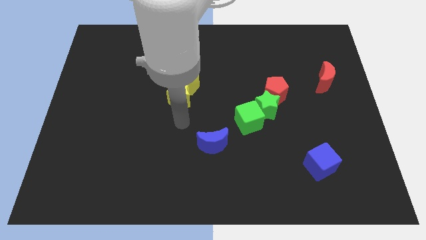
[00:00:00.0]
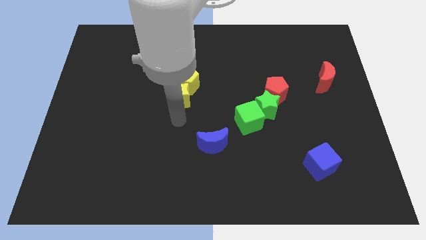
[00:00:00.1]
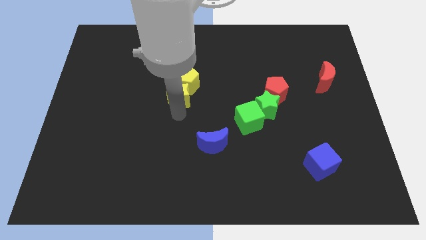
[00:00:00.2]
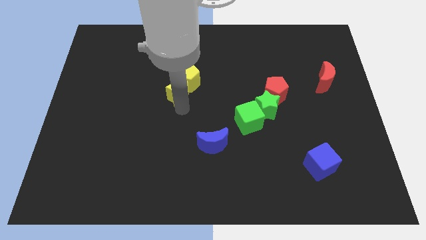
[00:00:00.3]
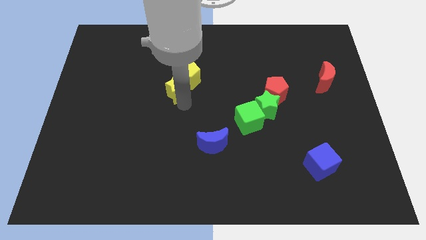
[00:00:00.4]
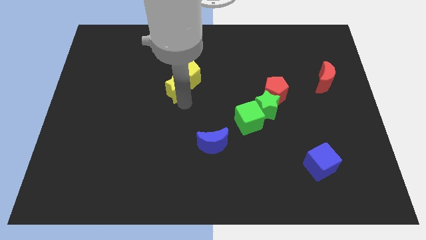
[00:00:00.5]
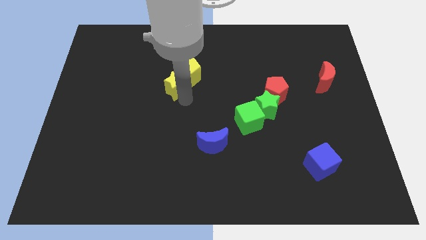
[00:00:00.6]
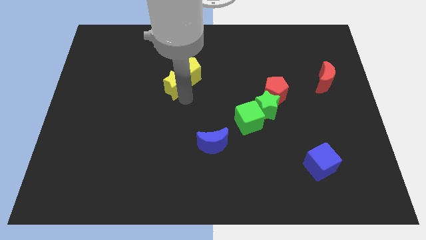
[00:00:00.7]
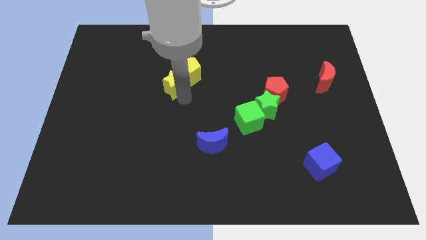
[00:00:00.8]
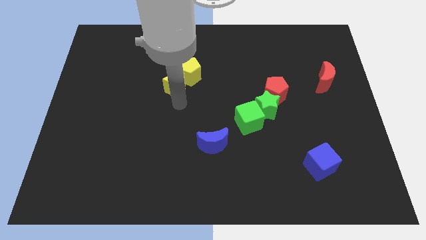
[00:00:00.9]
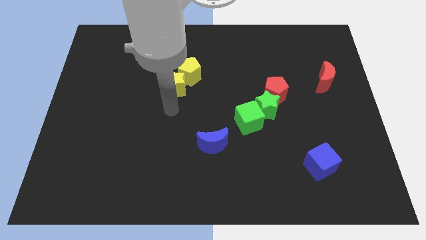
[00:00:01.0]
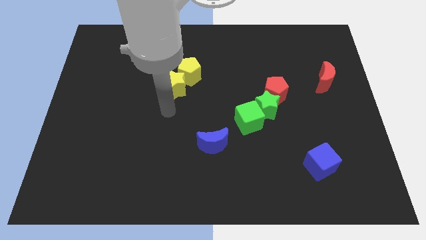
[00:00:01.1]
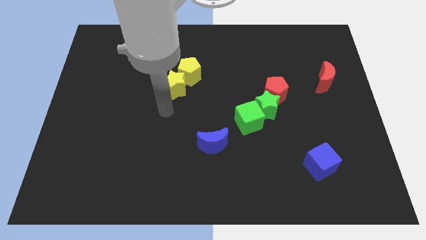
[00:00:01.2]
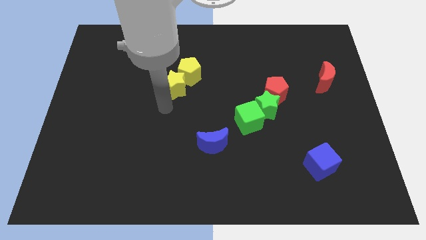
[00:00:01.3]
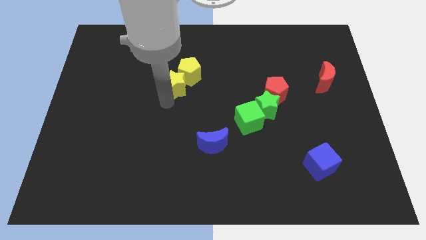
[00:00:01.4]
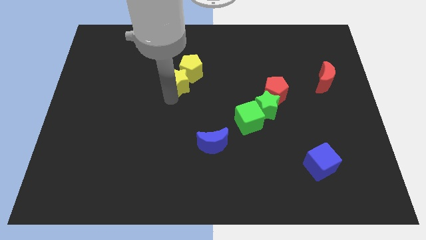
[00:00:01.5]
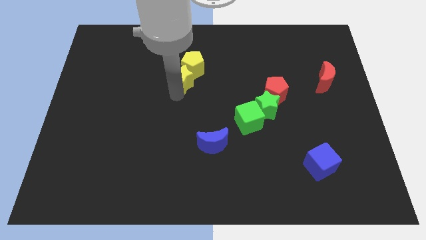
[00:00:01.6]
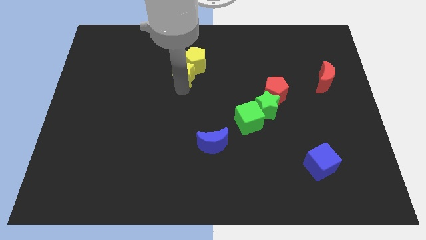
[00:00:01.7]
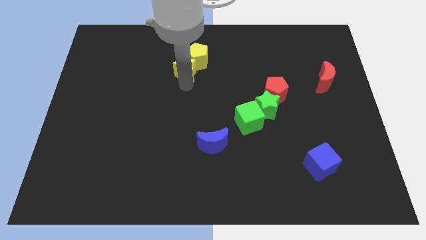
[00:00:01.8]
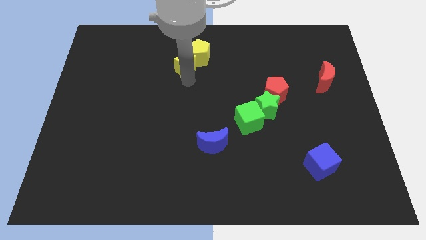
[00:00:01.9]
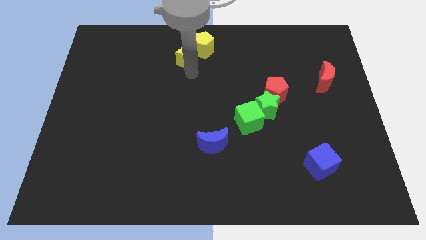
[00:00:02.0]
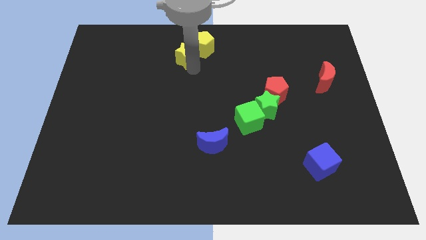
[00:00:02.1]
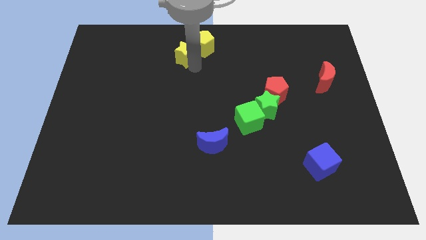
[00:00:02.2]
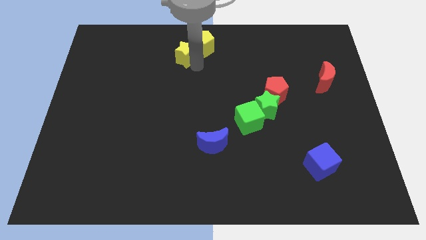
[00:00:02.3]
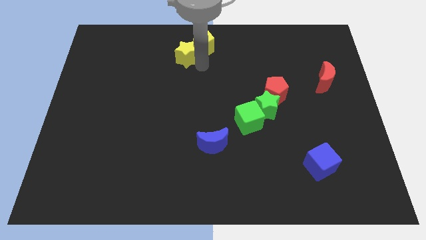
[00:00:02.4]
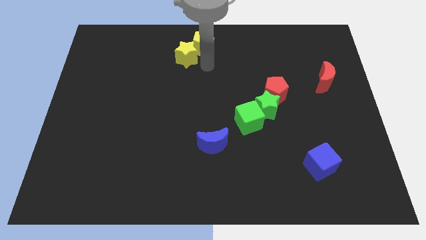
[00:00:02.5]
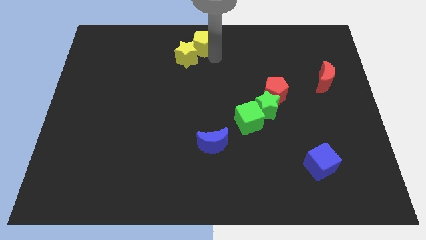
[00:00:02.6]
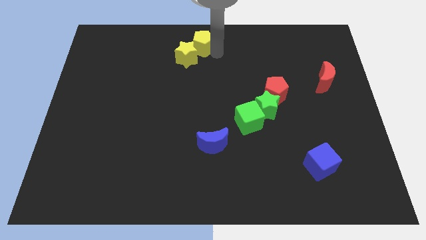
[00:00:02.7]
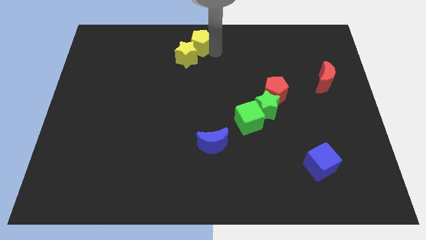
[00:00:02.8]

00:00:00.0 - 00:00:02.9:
move yellow blocks at center top

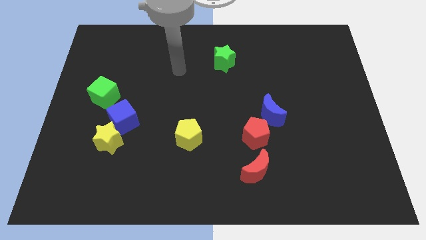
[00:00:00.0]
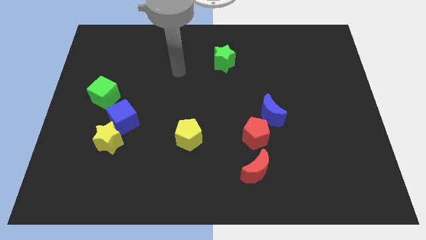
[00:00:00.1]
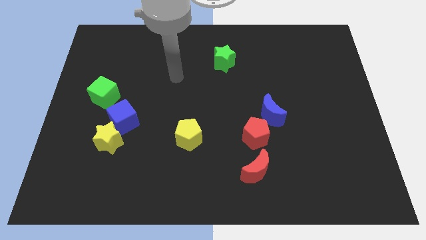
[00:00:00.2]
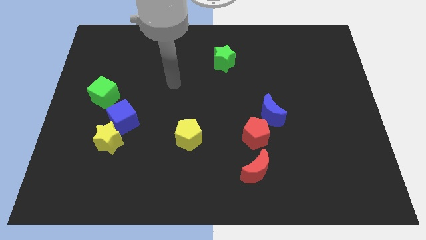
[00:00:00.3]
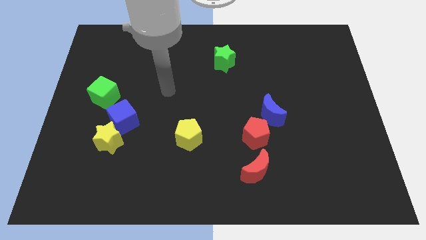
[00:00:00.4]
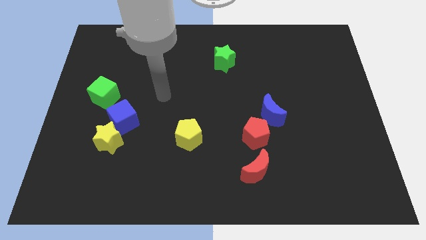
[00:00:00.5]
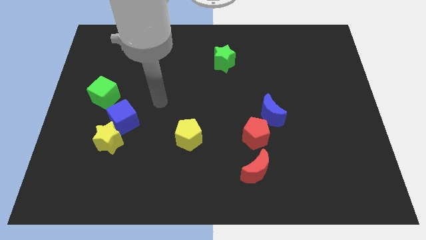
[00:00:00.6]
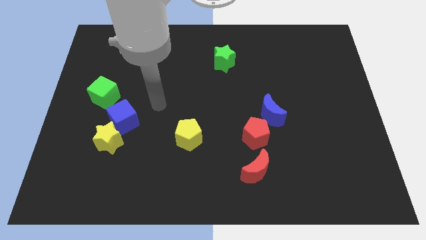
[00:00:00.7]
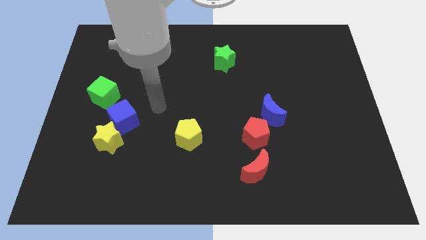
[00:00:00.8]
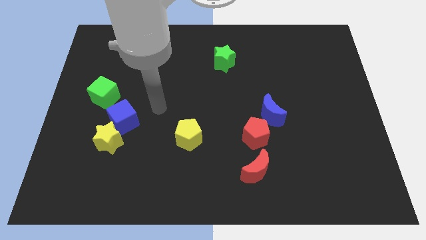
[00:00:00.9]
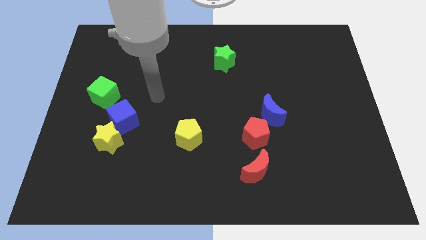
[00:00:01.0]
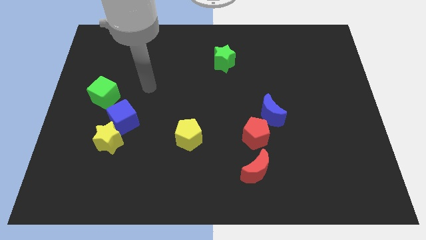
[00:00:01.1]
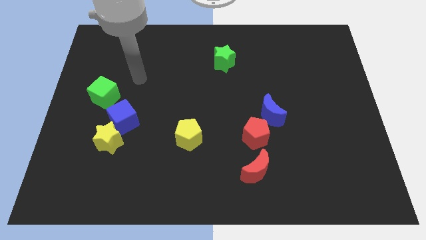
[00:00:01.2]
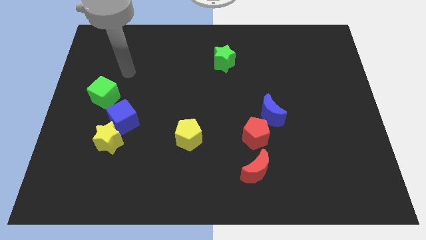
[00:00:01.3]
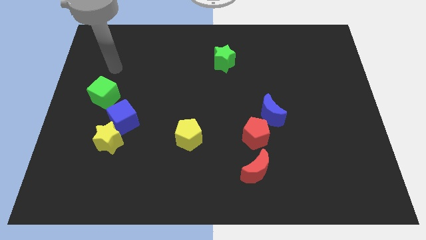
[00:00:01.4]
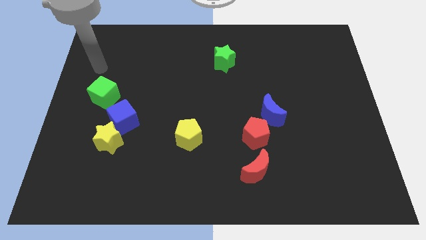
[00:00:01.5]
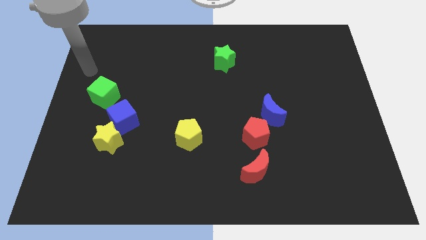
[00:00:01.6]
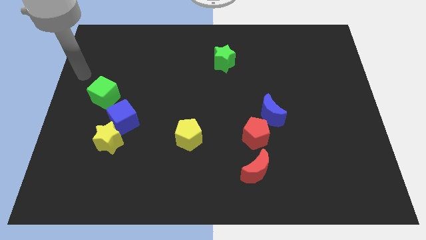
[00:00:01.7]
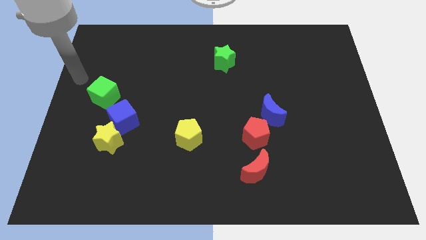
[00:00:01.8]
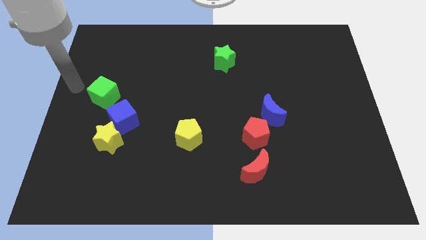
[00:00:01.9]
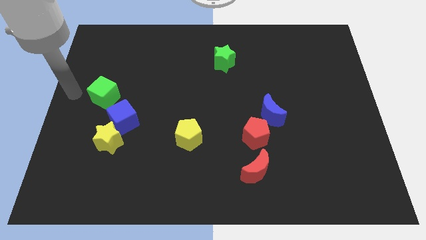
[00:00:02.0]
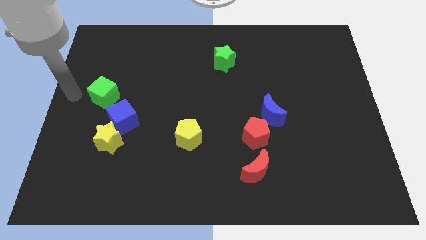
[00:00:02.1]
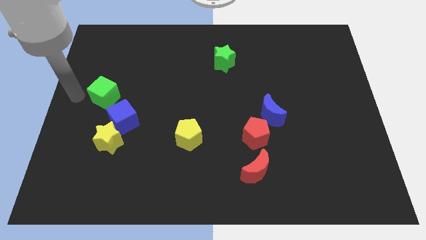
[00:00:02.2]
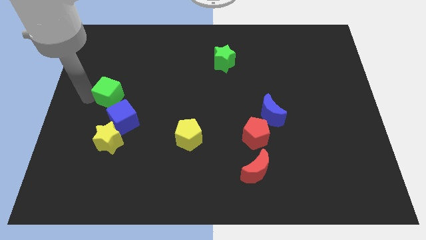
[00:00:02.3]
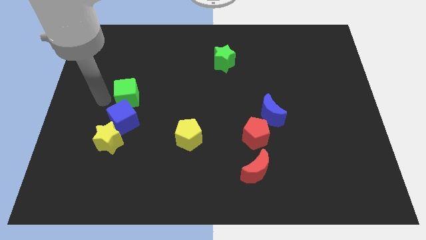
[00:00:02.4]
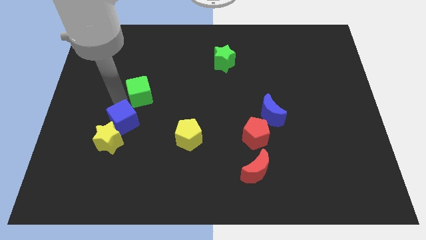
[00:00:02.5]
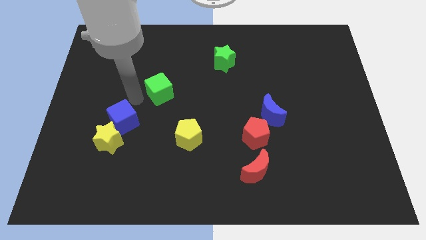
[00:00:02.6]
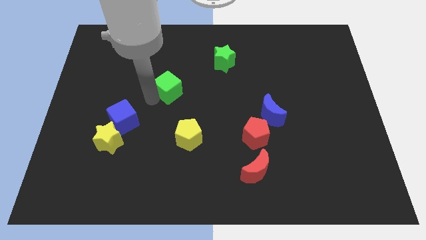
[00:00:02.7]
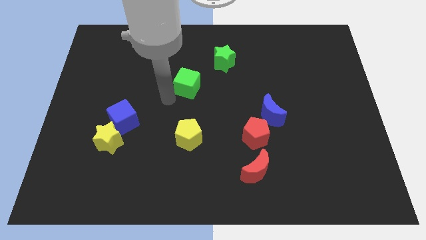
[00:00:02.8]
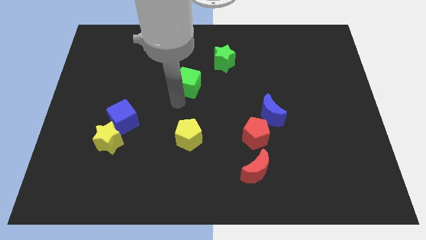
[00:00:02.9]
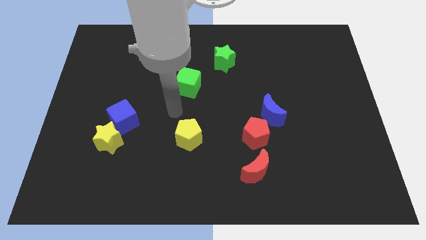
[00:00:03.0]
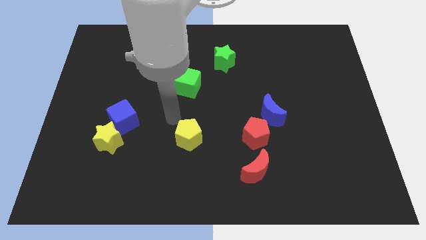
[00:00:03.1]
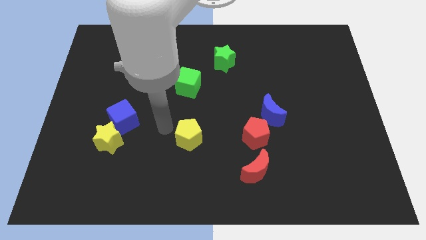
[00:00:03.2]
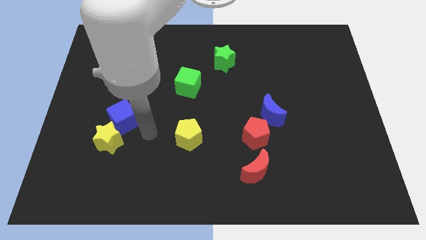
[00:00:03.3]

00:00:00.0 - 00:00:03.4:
move the green cube vertically top of the yellow pentagon

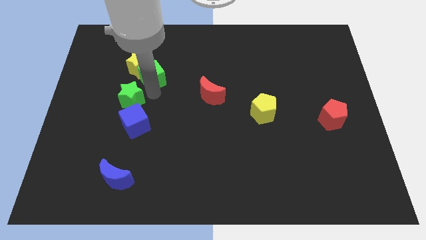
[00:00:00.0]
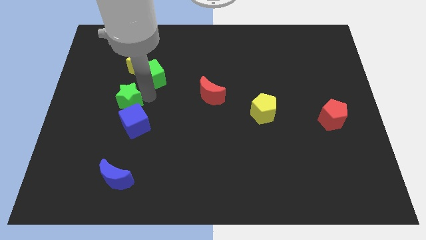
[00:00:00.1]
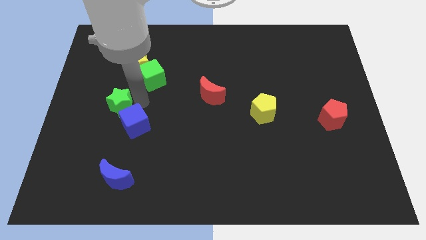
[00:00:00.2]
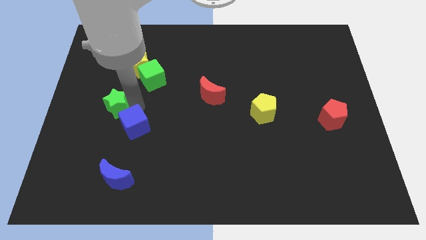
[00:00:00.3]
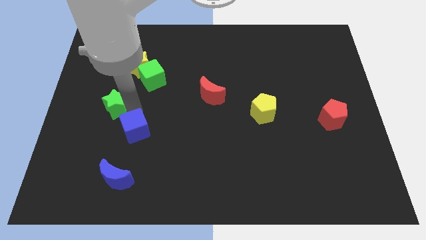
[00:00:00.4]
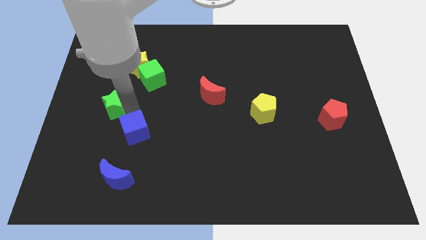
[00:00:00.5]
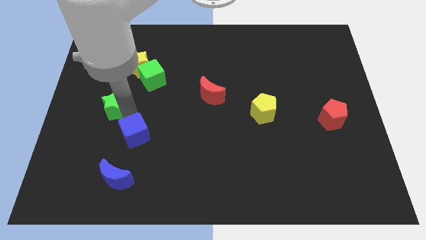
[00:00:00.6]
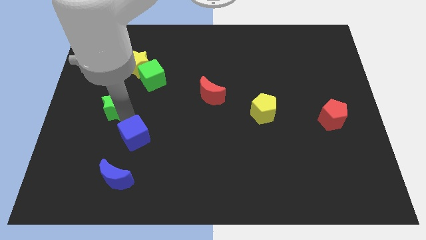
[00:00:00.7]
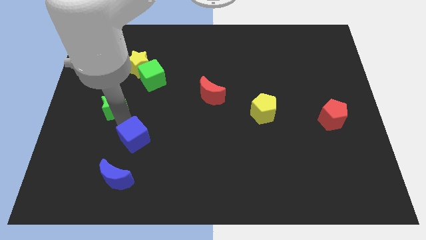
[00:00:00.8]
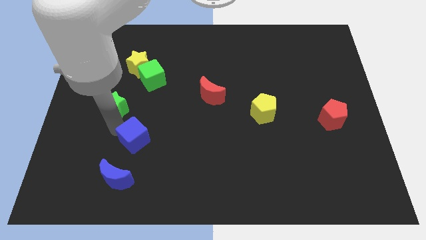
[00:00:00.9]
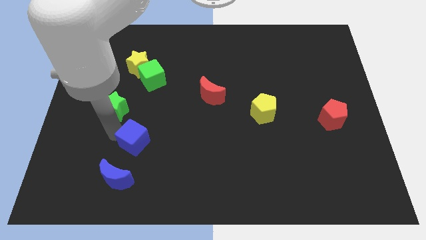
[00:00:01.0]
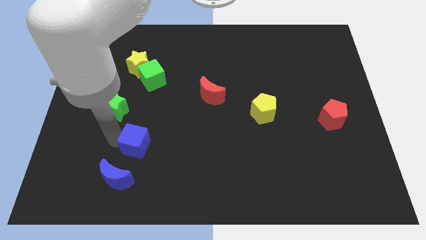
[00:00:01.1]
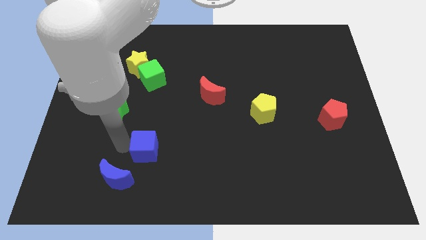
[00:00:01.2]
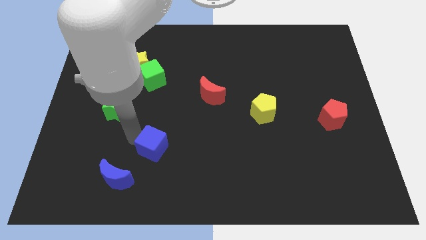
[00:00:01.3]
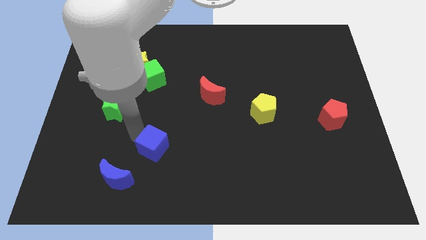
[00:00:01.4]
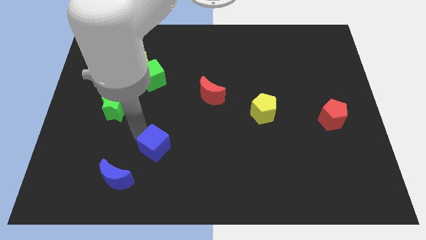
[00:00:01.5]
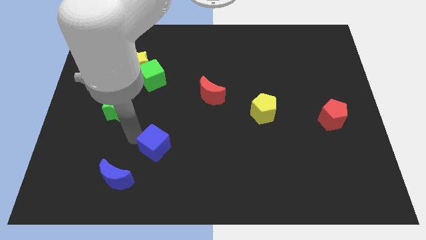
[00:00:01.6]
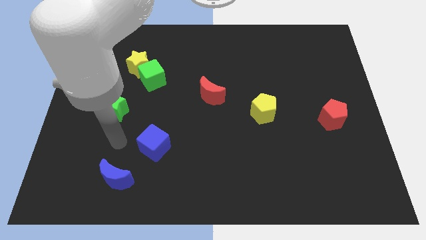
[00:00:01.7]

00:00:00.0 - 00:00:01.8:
take the blue cube away from the green star

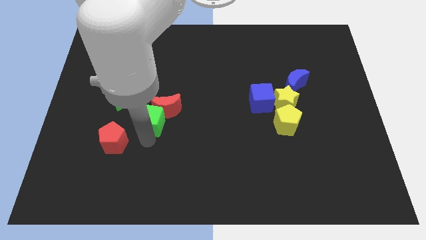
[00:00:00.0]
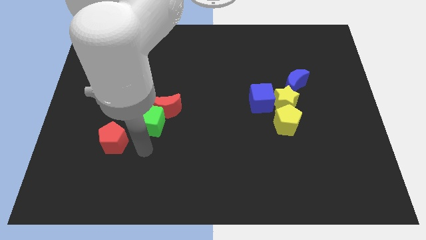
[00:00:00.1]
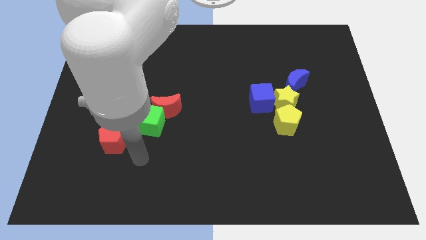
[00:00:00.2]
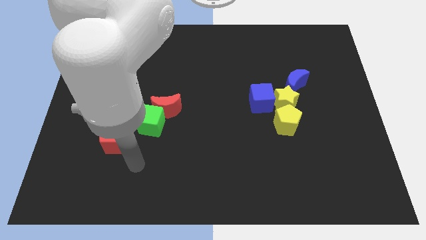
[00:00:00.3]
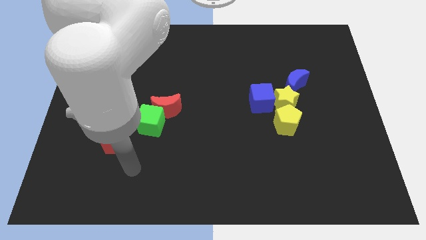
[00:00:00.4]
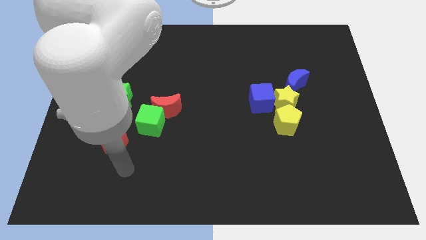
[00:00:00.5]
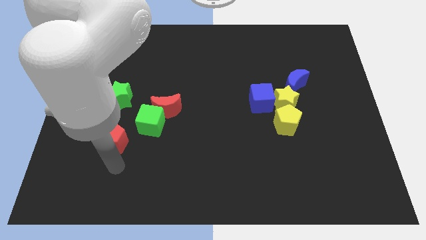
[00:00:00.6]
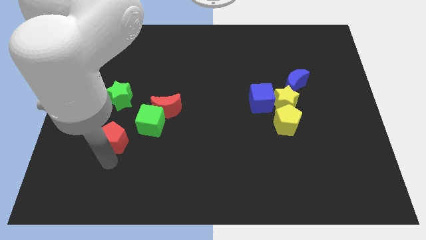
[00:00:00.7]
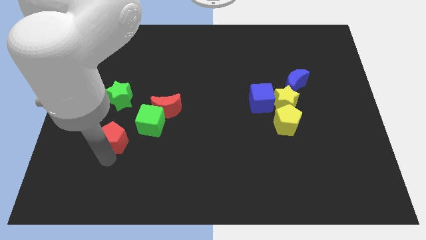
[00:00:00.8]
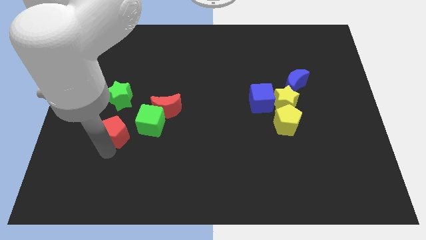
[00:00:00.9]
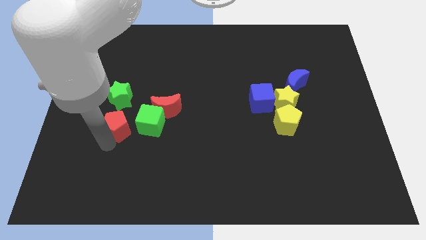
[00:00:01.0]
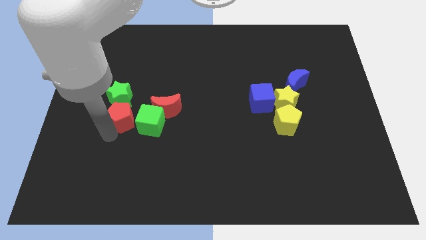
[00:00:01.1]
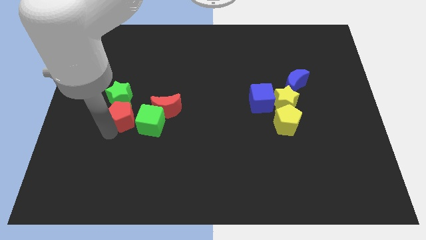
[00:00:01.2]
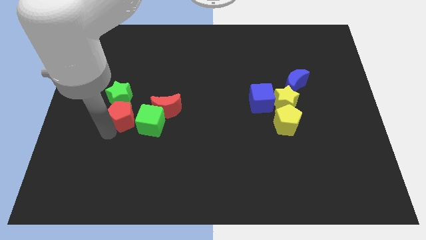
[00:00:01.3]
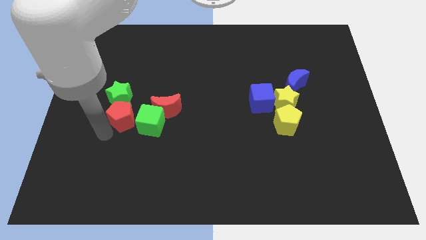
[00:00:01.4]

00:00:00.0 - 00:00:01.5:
move the red pentagon towards the bottom side of the green star
